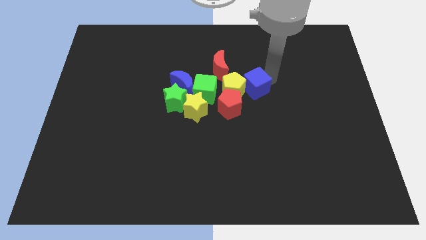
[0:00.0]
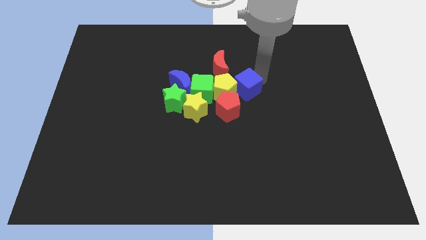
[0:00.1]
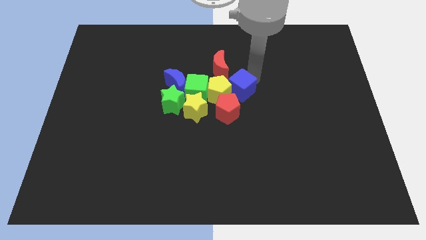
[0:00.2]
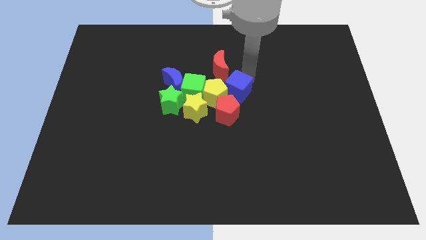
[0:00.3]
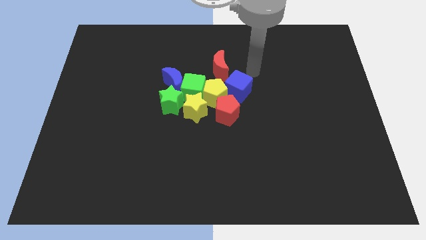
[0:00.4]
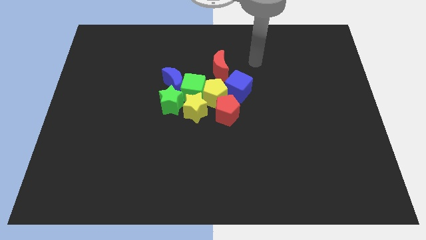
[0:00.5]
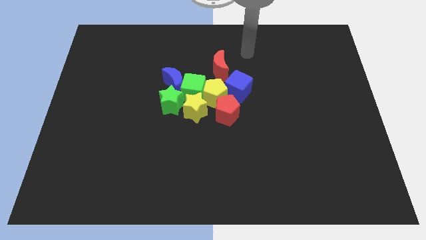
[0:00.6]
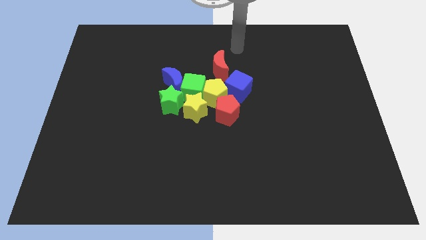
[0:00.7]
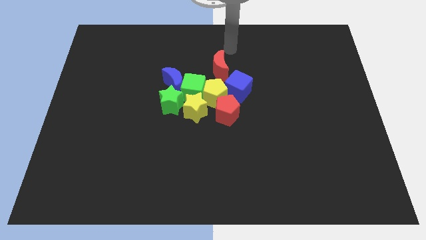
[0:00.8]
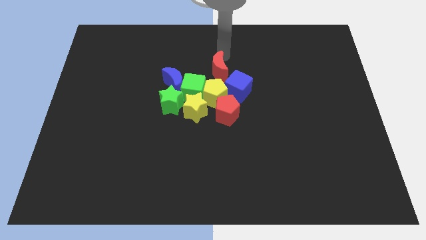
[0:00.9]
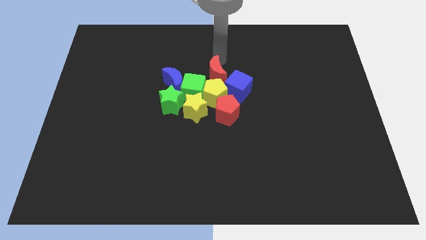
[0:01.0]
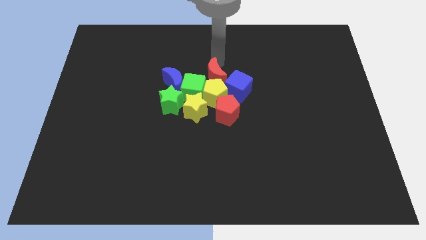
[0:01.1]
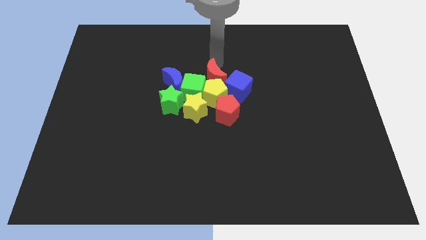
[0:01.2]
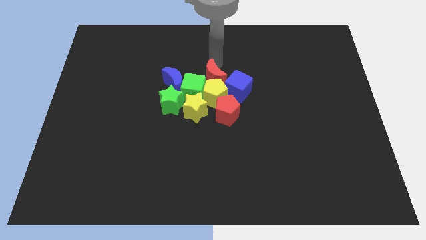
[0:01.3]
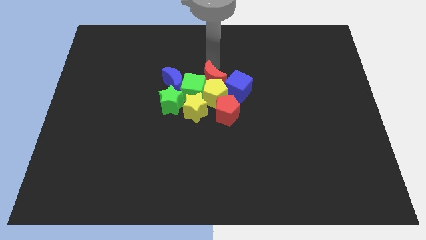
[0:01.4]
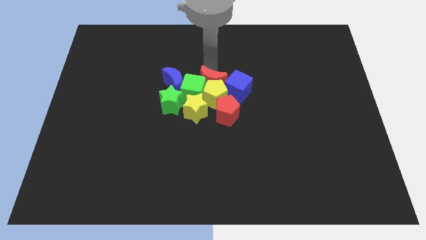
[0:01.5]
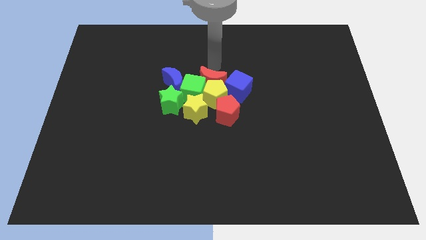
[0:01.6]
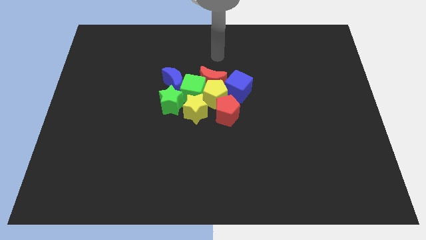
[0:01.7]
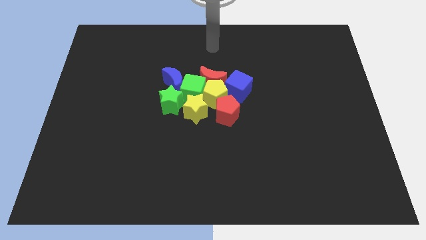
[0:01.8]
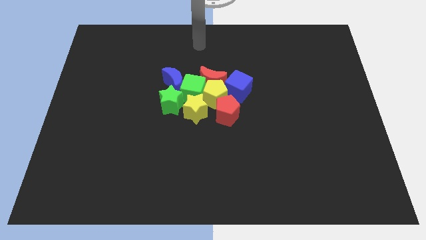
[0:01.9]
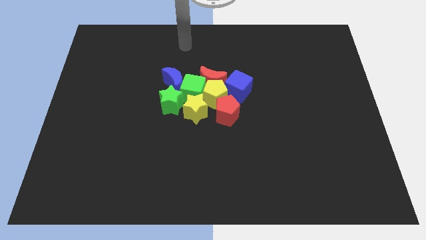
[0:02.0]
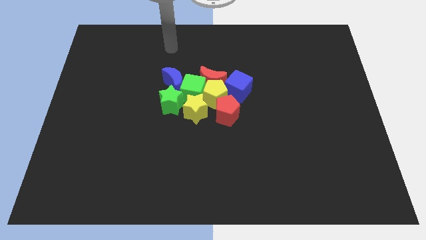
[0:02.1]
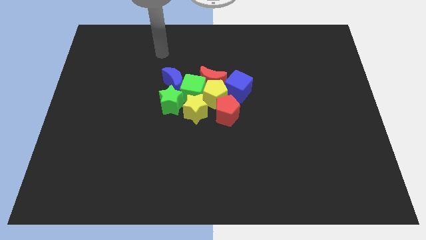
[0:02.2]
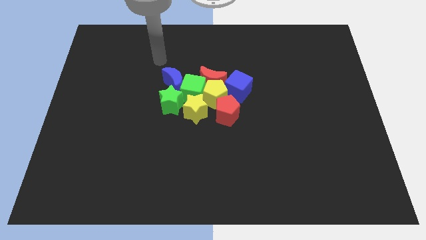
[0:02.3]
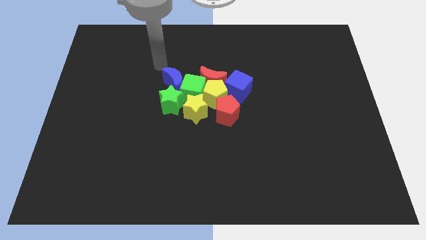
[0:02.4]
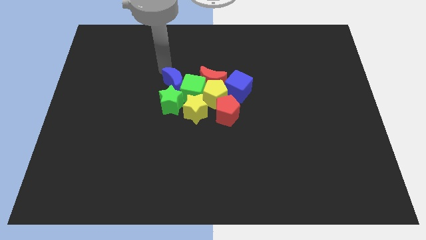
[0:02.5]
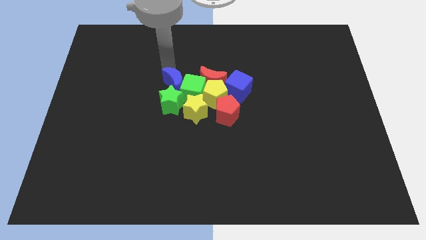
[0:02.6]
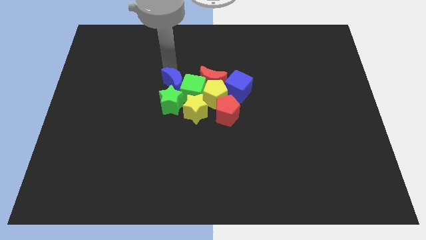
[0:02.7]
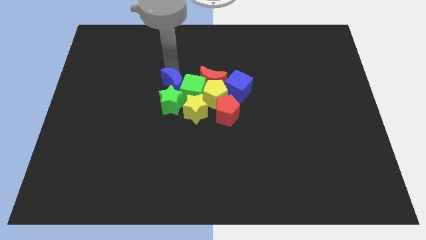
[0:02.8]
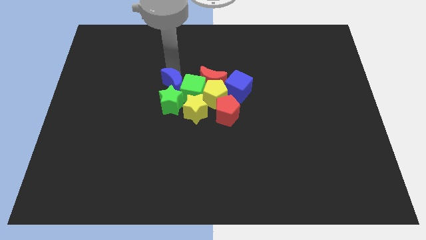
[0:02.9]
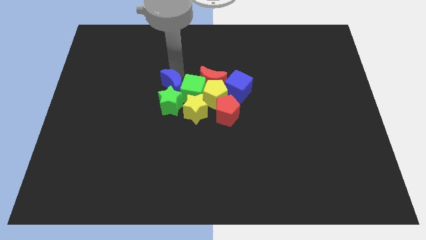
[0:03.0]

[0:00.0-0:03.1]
tap on top edge of blue moon

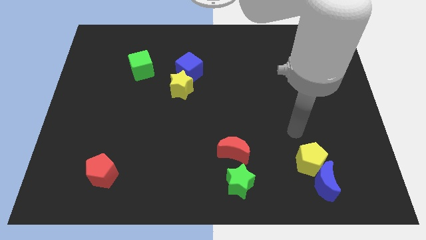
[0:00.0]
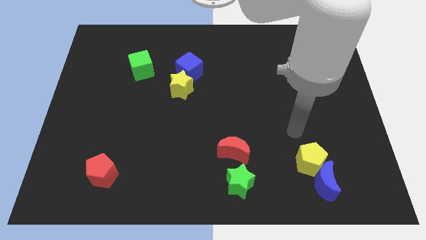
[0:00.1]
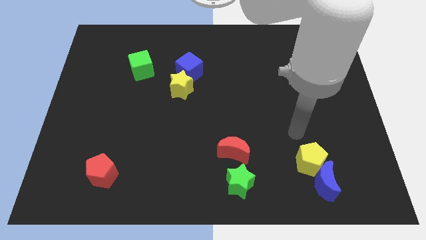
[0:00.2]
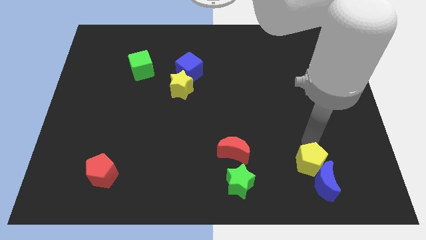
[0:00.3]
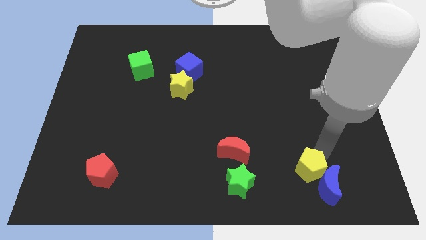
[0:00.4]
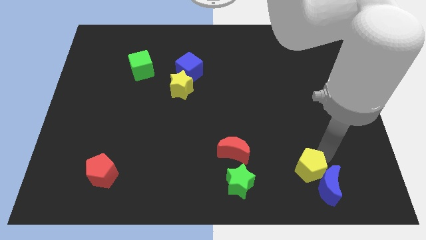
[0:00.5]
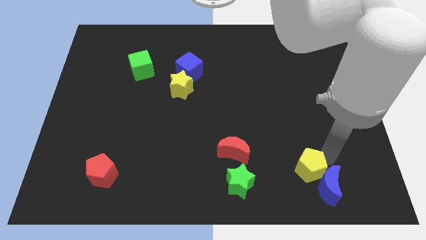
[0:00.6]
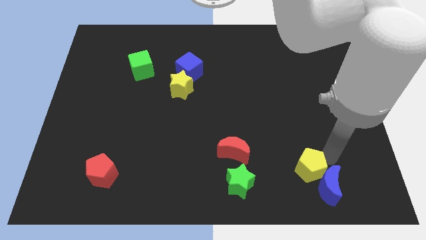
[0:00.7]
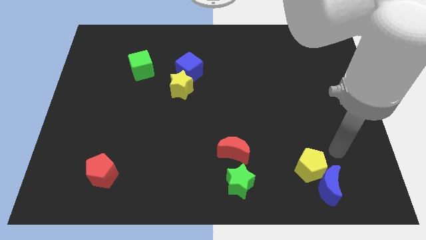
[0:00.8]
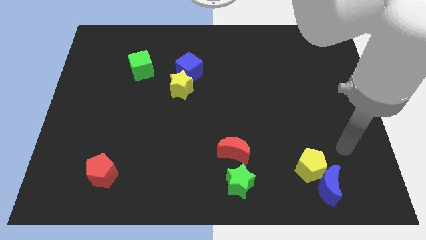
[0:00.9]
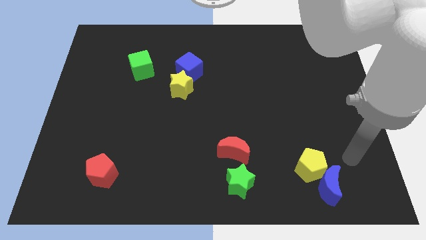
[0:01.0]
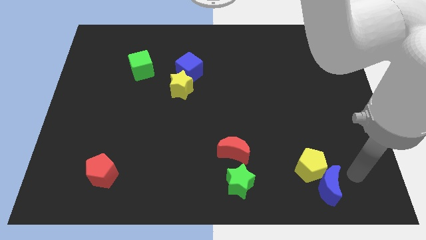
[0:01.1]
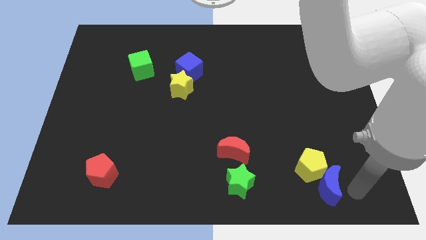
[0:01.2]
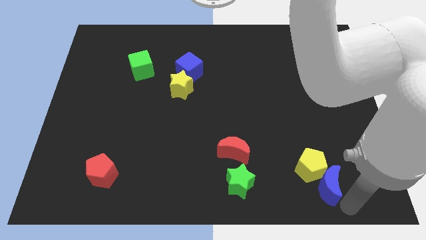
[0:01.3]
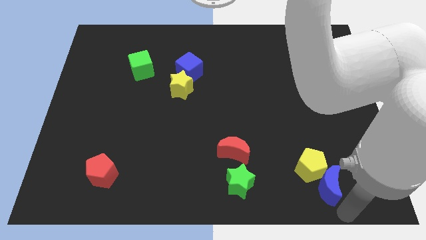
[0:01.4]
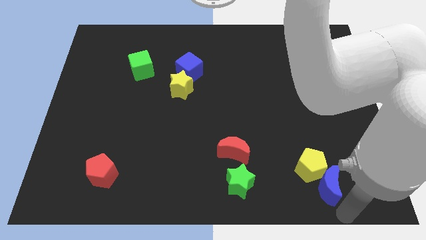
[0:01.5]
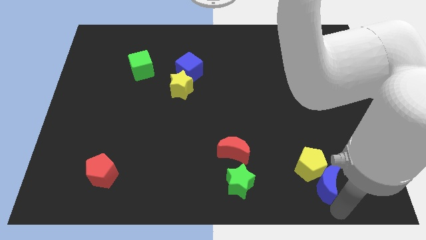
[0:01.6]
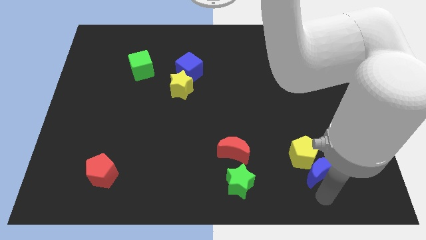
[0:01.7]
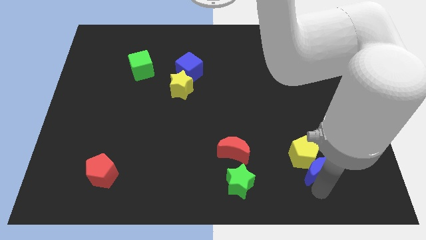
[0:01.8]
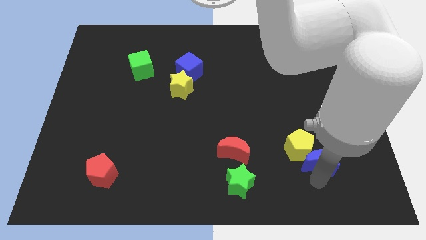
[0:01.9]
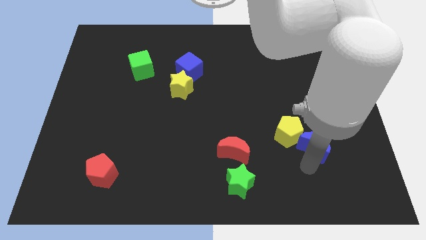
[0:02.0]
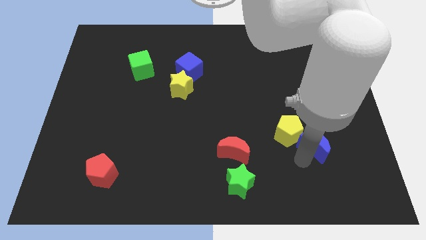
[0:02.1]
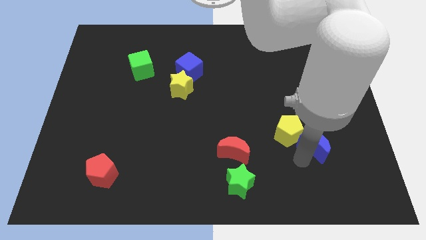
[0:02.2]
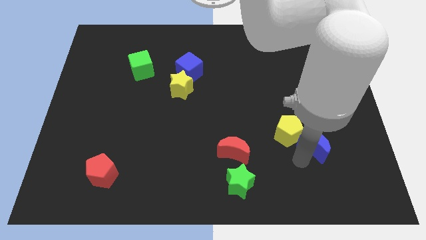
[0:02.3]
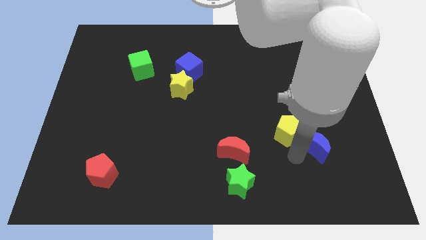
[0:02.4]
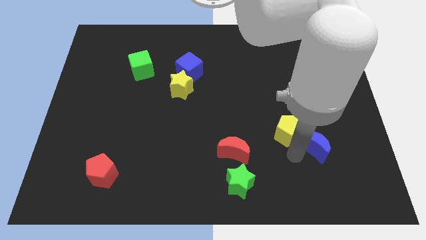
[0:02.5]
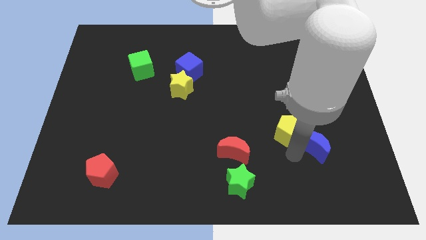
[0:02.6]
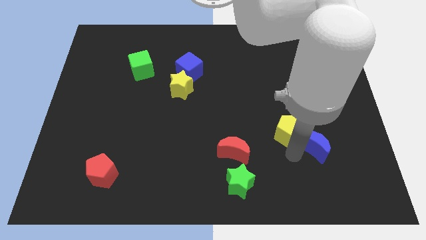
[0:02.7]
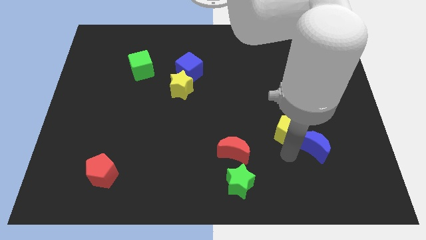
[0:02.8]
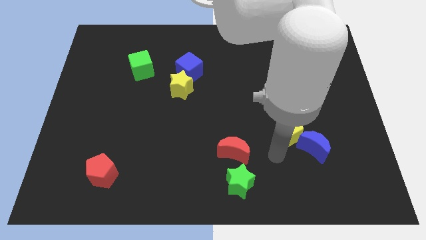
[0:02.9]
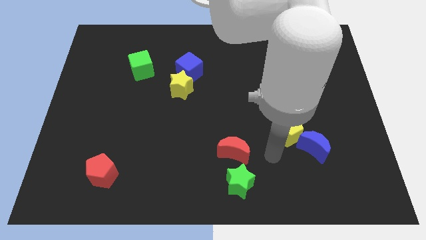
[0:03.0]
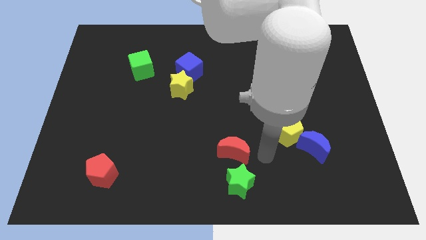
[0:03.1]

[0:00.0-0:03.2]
push the yellow pentagon and the blue crescent up slightly

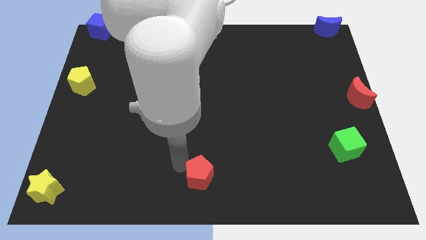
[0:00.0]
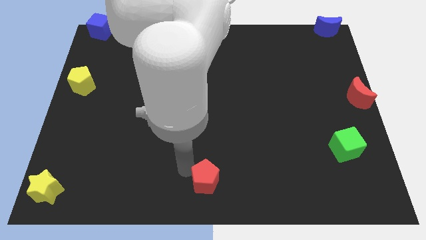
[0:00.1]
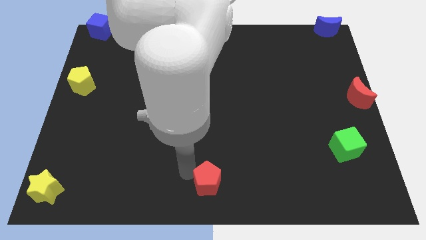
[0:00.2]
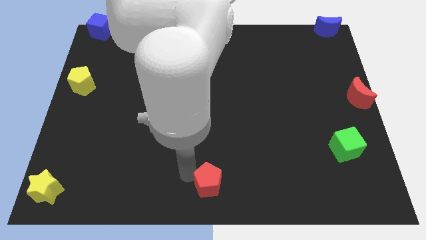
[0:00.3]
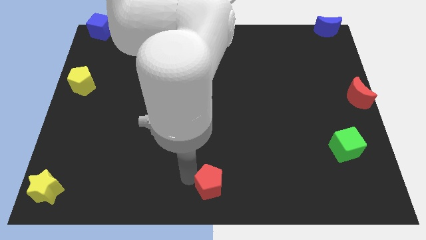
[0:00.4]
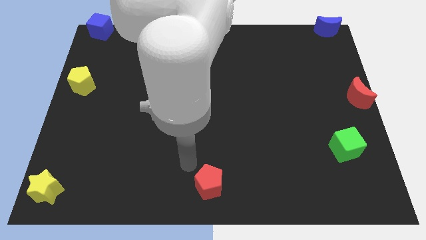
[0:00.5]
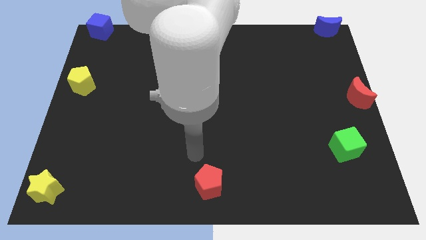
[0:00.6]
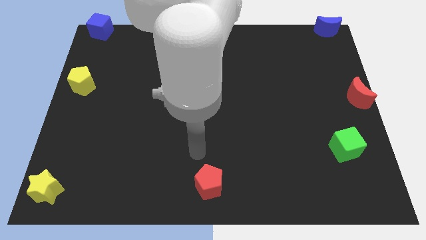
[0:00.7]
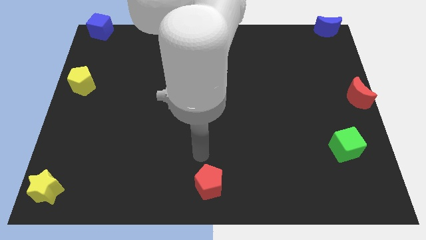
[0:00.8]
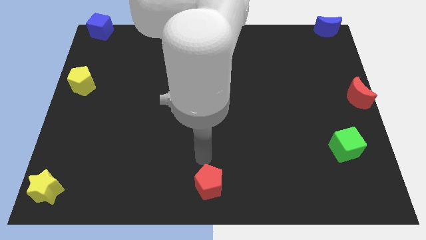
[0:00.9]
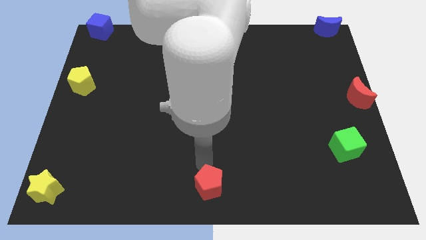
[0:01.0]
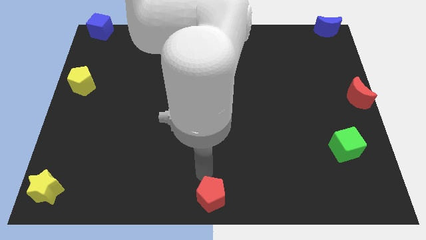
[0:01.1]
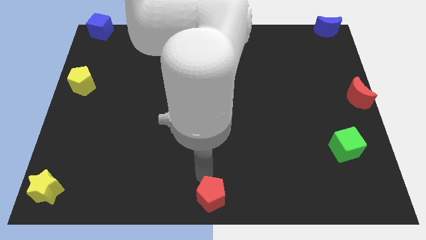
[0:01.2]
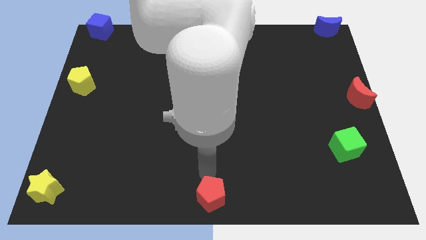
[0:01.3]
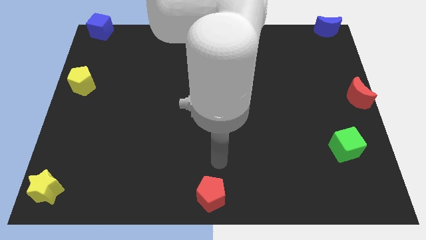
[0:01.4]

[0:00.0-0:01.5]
place red crescent towards bottom middle end of the board

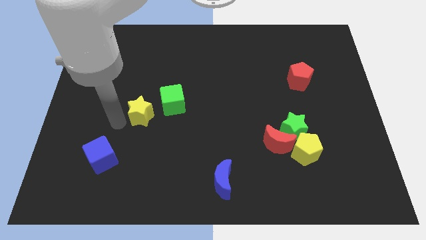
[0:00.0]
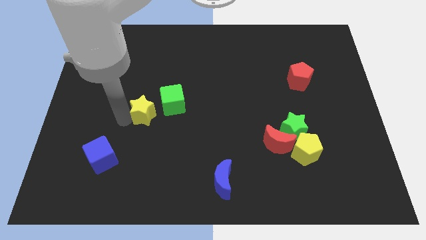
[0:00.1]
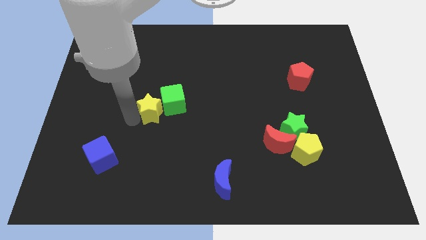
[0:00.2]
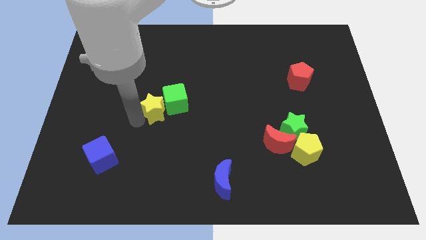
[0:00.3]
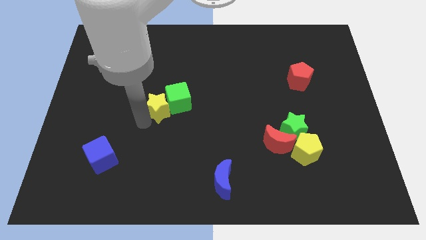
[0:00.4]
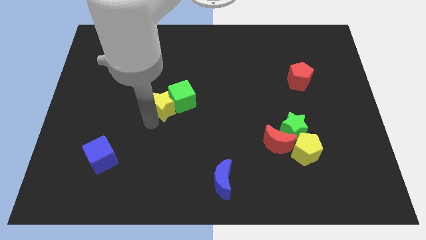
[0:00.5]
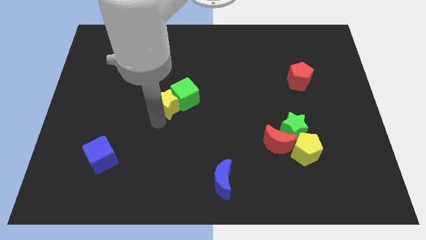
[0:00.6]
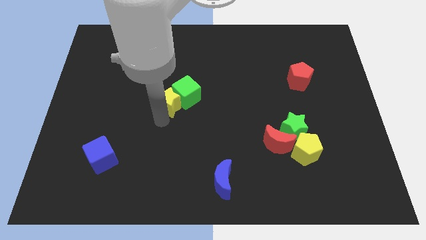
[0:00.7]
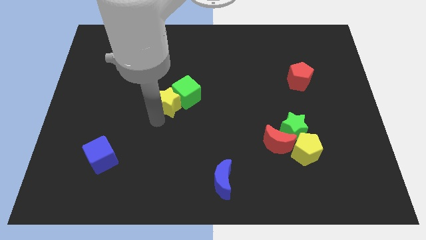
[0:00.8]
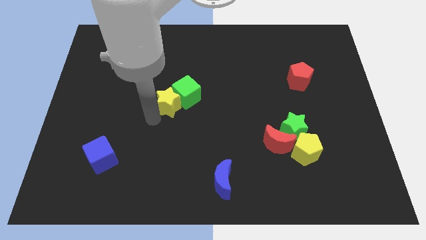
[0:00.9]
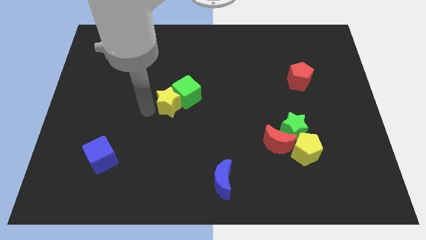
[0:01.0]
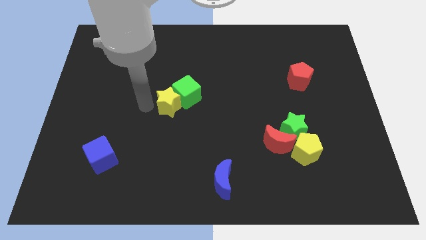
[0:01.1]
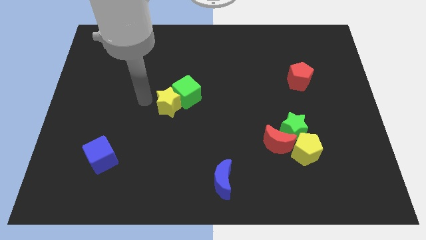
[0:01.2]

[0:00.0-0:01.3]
push the yellow star to the left of the green cube
